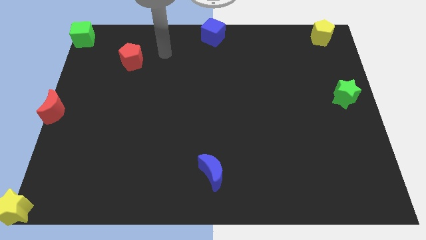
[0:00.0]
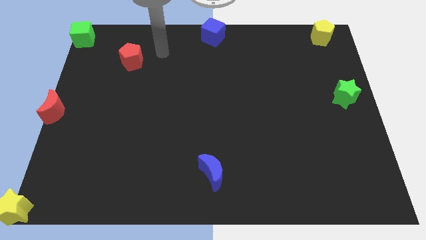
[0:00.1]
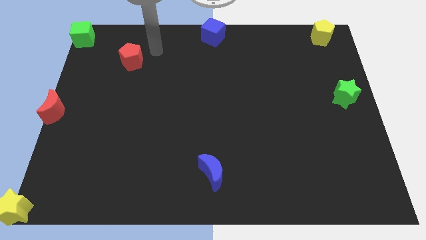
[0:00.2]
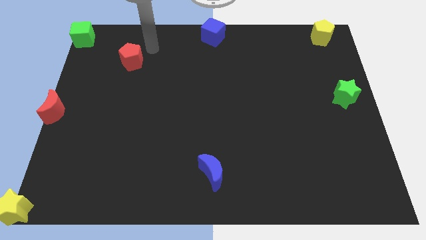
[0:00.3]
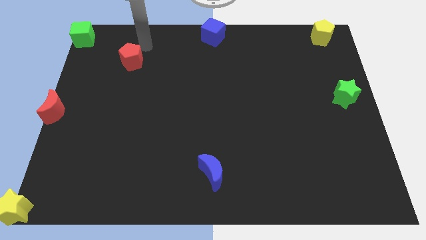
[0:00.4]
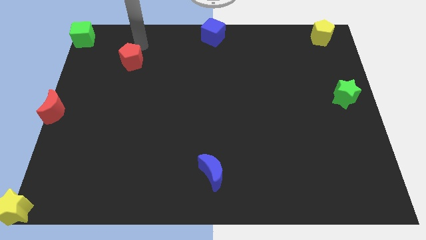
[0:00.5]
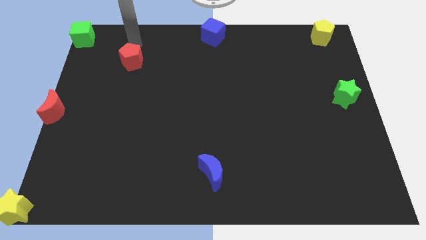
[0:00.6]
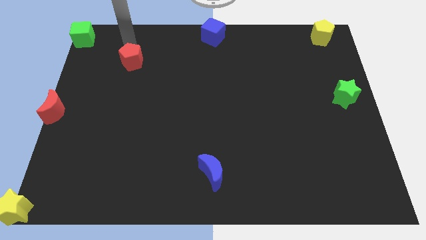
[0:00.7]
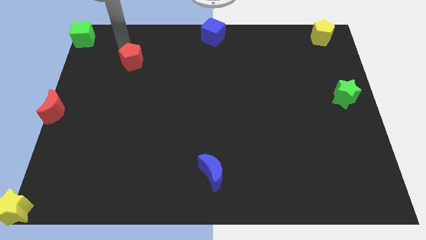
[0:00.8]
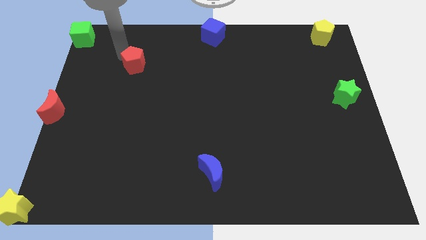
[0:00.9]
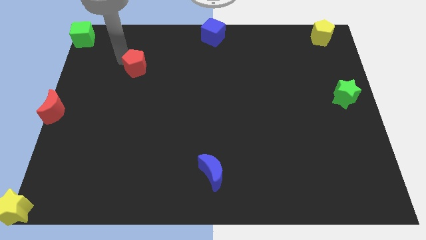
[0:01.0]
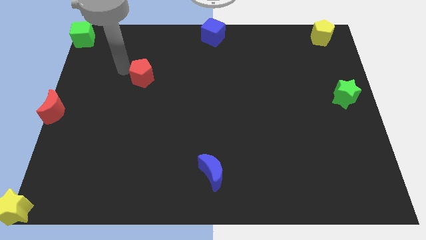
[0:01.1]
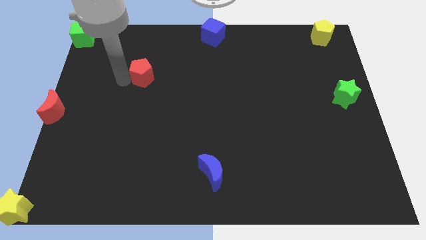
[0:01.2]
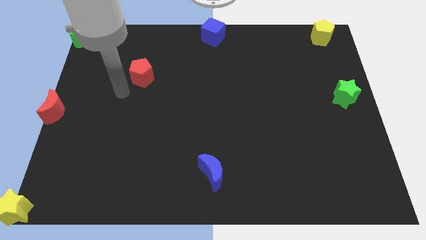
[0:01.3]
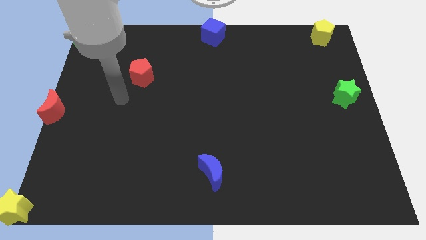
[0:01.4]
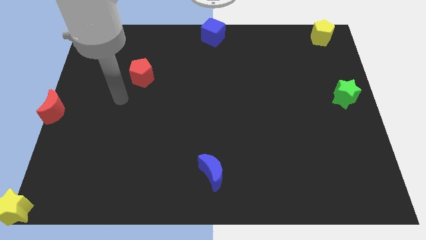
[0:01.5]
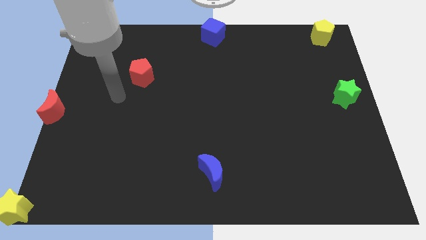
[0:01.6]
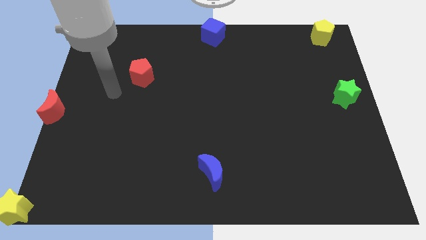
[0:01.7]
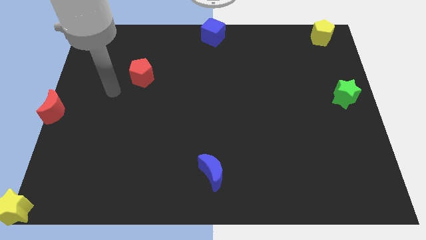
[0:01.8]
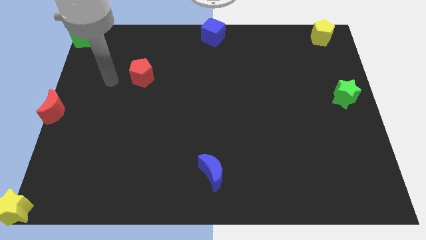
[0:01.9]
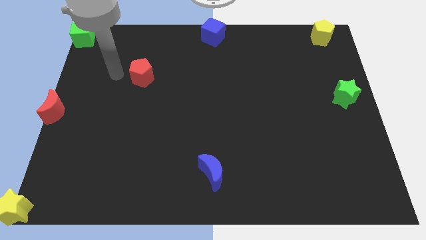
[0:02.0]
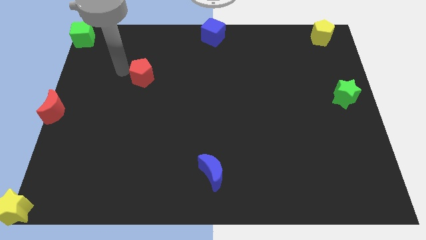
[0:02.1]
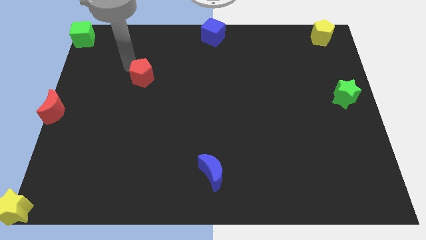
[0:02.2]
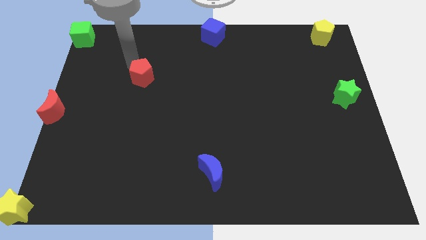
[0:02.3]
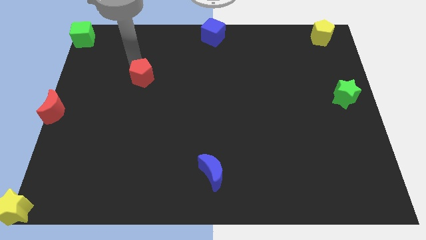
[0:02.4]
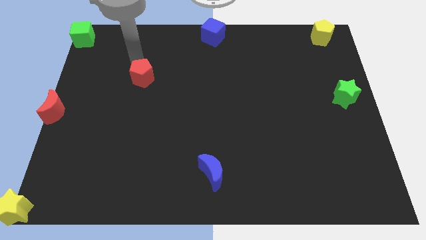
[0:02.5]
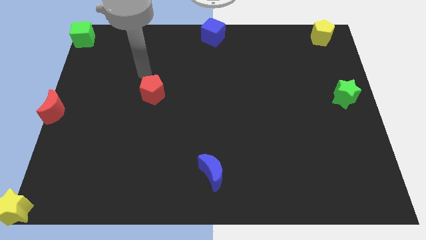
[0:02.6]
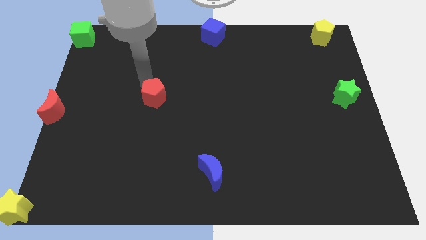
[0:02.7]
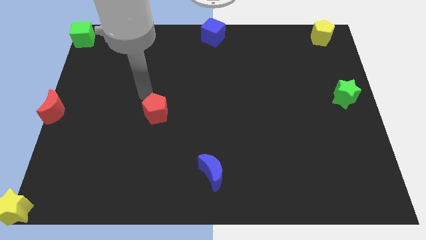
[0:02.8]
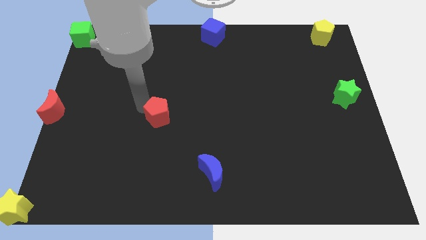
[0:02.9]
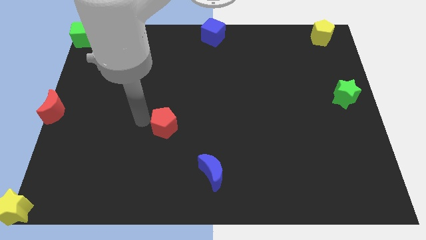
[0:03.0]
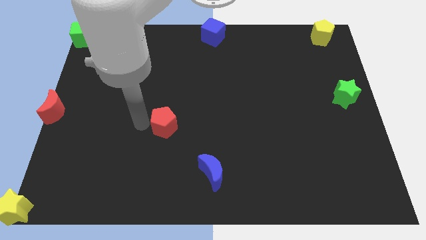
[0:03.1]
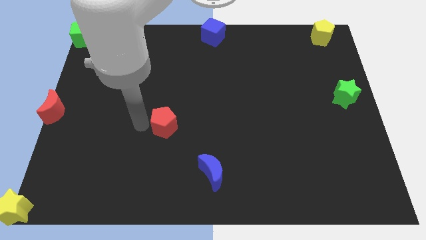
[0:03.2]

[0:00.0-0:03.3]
push the red pentagon towards the blue crescent

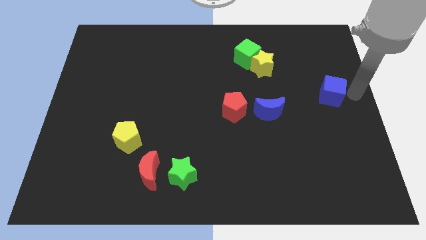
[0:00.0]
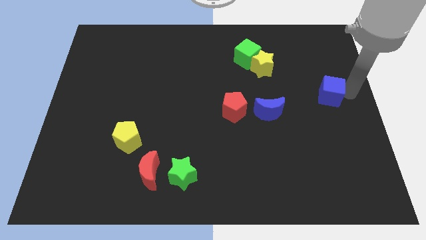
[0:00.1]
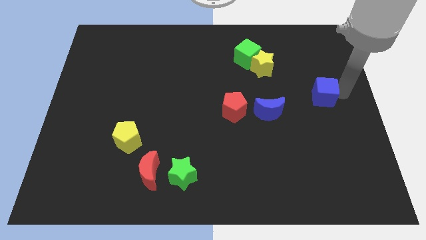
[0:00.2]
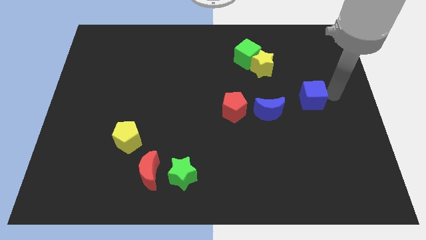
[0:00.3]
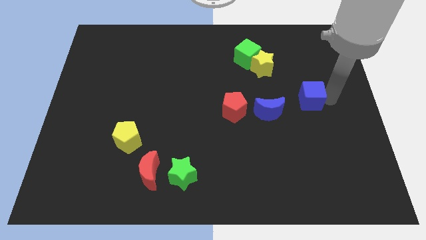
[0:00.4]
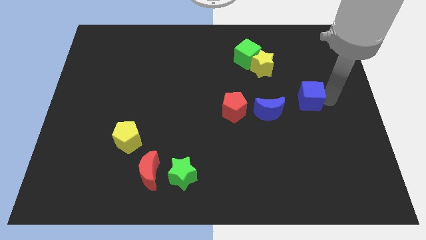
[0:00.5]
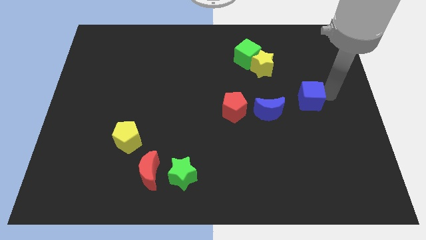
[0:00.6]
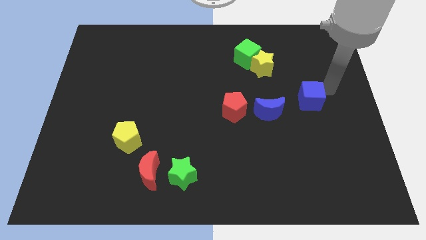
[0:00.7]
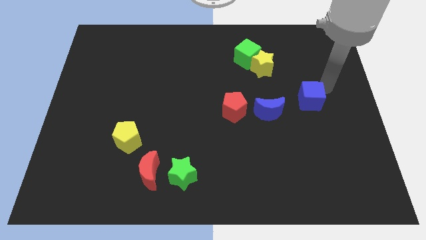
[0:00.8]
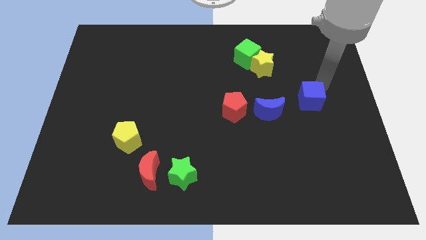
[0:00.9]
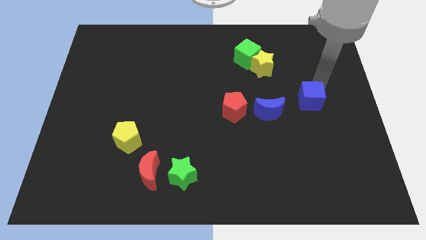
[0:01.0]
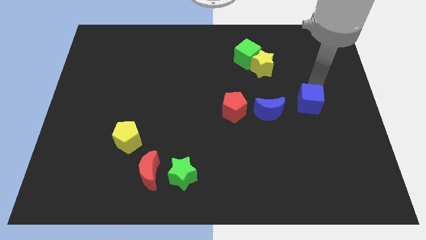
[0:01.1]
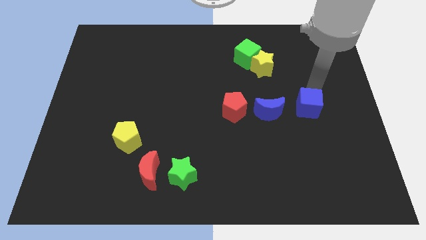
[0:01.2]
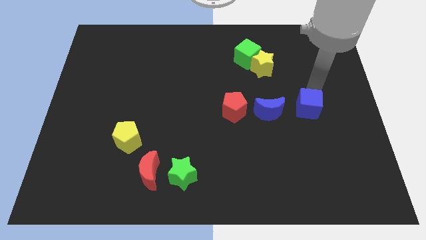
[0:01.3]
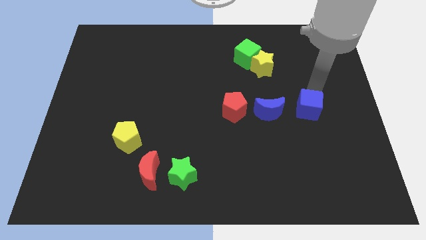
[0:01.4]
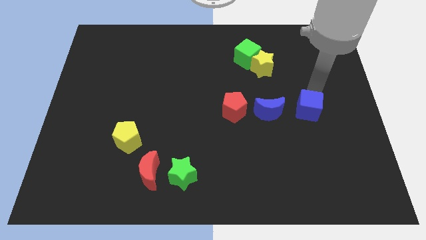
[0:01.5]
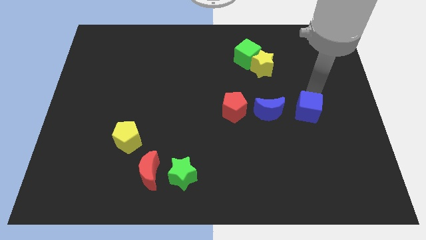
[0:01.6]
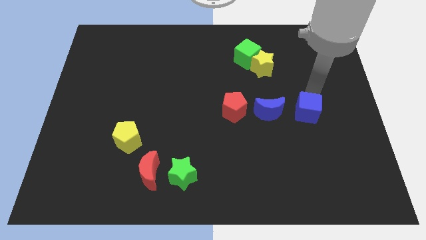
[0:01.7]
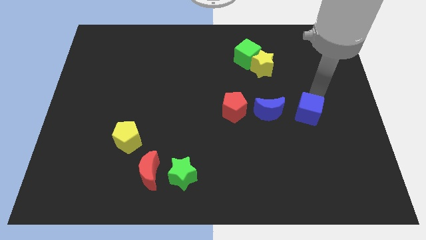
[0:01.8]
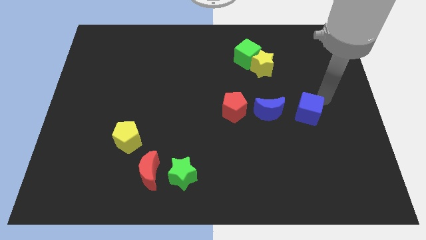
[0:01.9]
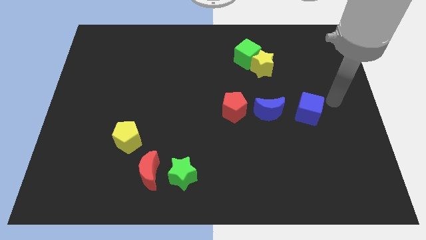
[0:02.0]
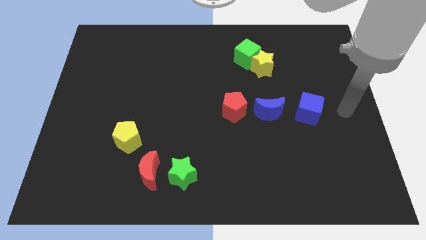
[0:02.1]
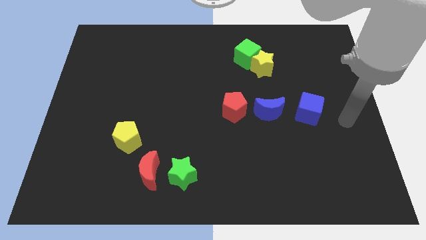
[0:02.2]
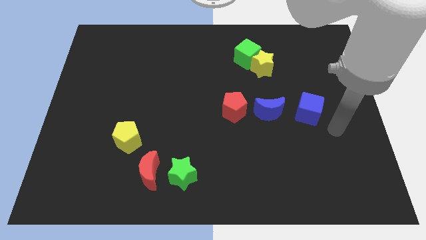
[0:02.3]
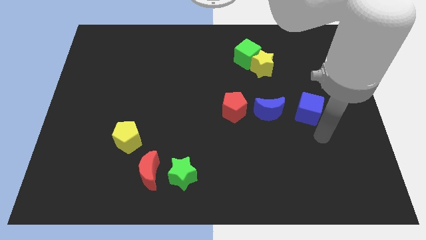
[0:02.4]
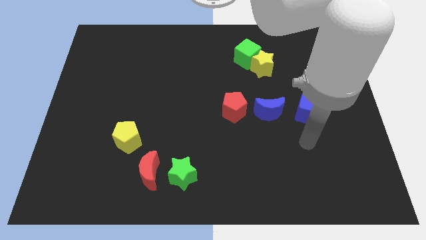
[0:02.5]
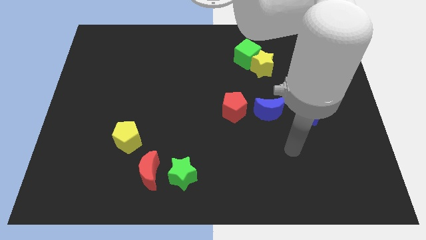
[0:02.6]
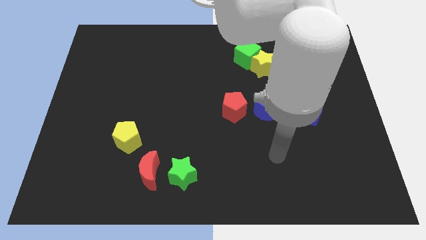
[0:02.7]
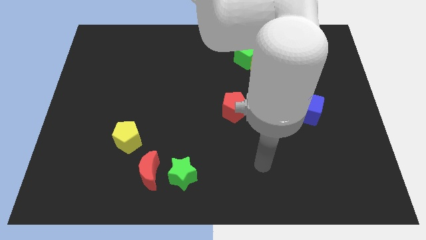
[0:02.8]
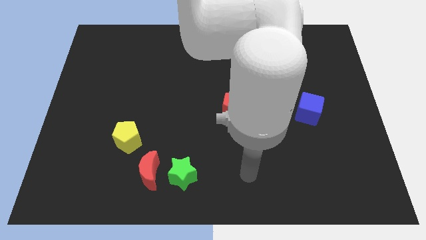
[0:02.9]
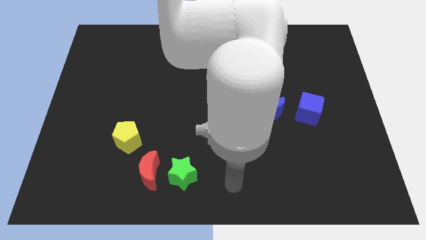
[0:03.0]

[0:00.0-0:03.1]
slightly push the blue cube to the right of the blue moon

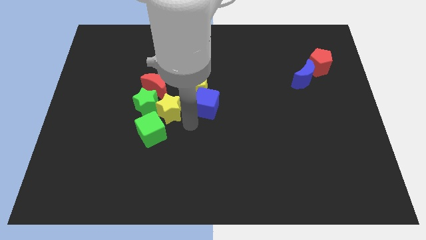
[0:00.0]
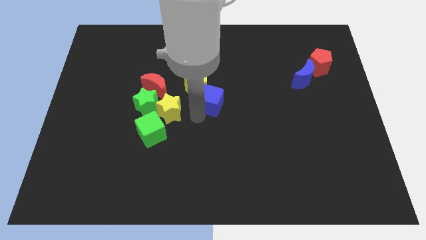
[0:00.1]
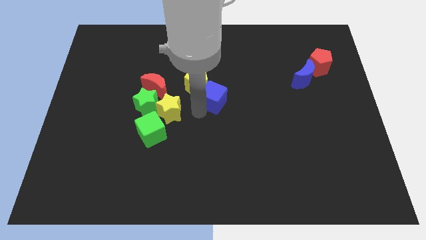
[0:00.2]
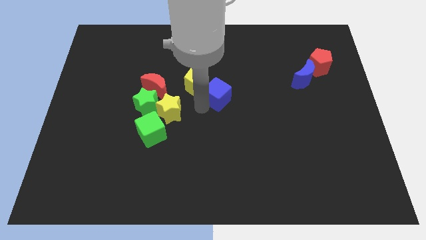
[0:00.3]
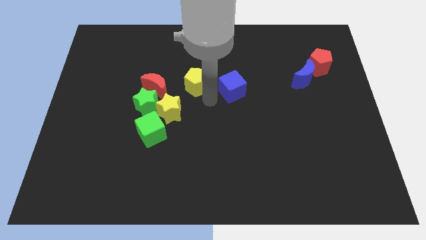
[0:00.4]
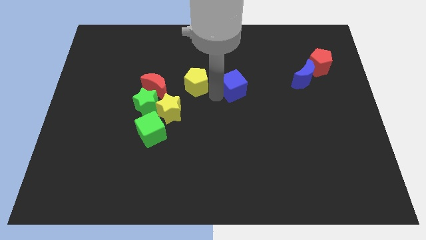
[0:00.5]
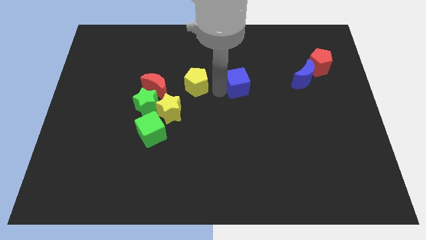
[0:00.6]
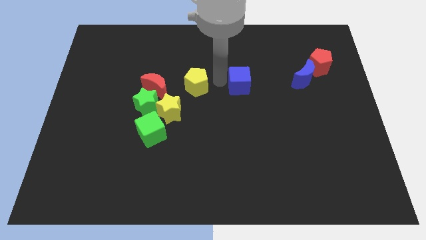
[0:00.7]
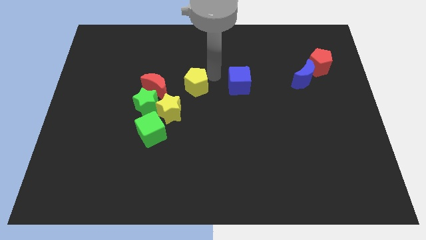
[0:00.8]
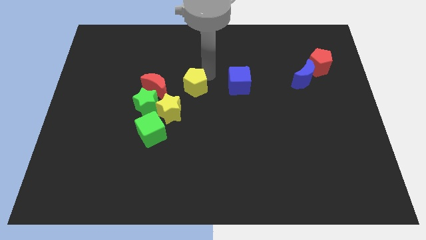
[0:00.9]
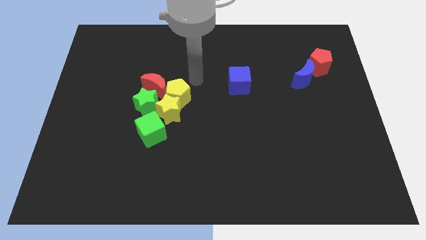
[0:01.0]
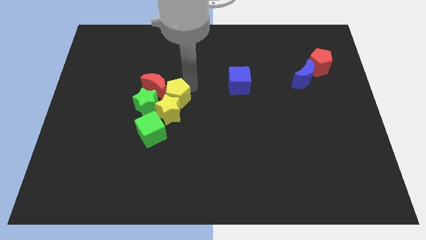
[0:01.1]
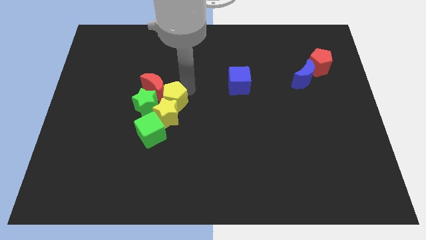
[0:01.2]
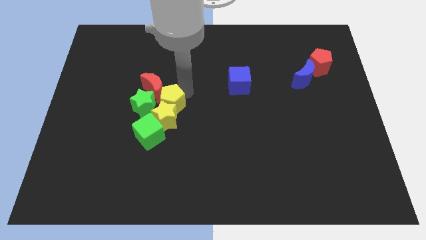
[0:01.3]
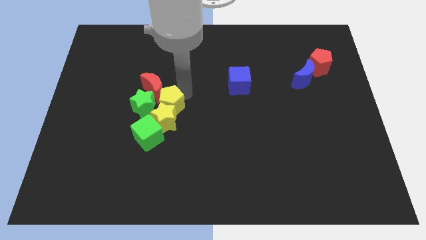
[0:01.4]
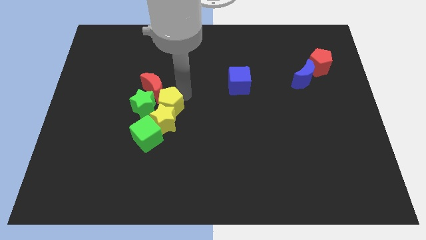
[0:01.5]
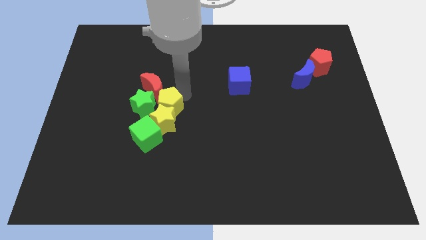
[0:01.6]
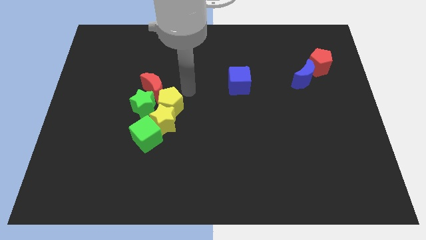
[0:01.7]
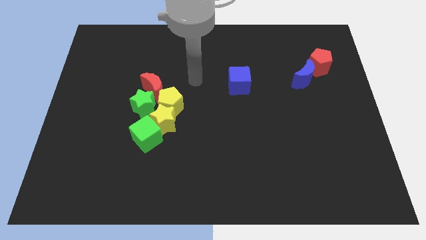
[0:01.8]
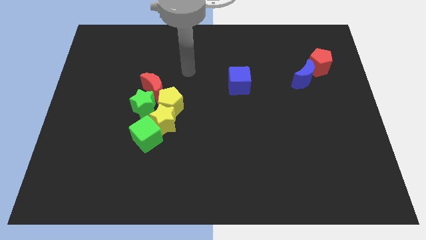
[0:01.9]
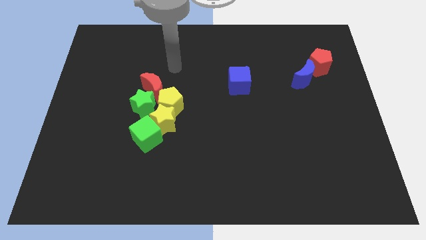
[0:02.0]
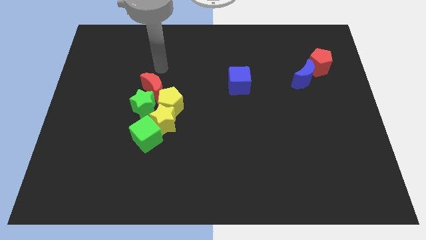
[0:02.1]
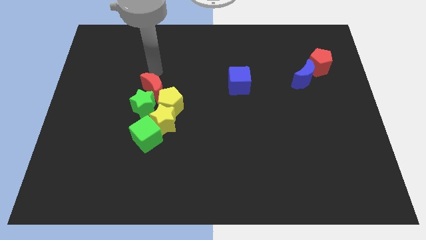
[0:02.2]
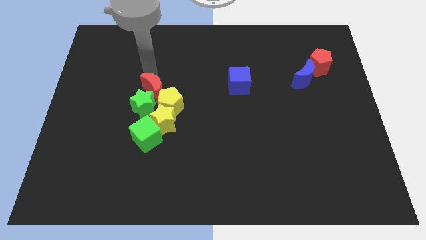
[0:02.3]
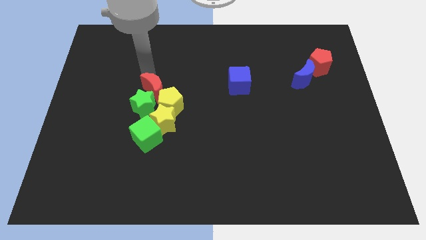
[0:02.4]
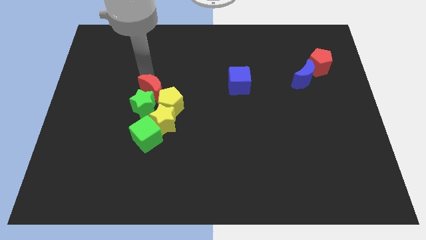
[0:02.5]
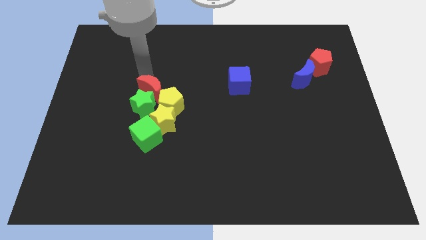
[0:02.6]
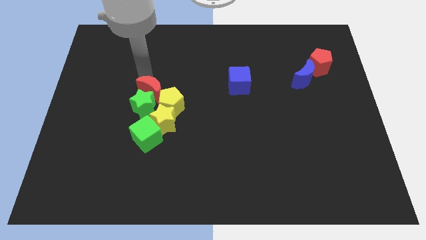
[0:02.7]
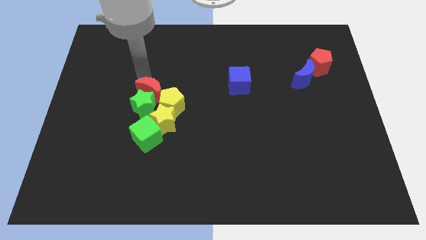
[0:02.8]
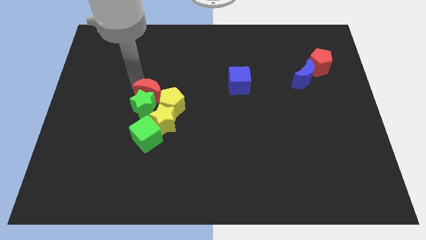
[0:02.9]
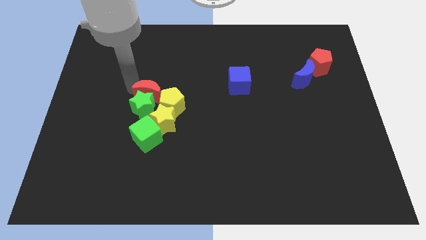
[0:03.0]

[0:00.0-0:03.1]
push yellow pentagon into yellow star
